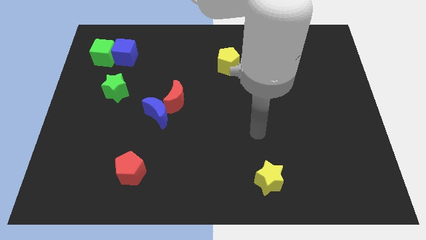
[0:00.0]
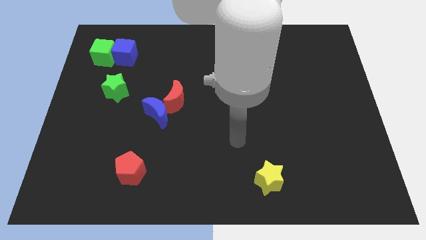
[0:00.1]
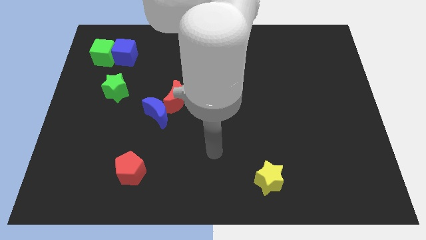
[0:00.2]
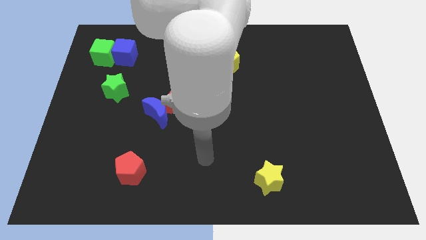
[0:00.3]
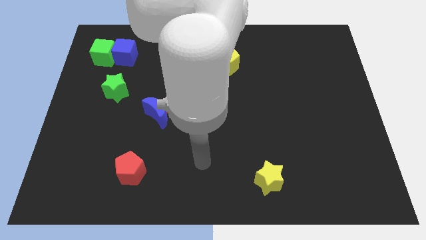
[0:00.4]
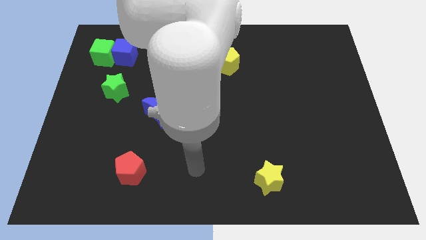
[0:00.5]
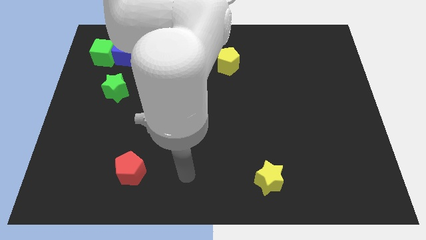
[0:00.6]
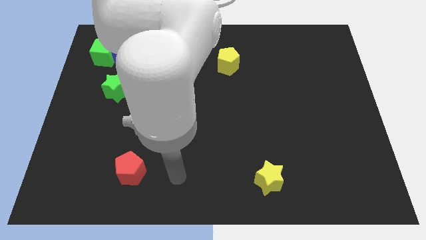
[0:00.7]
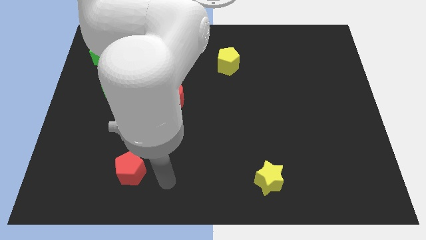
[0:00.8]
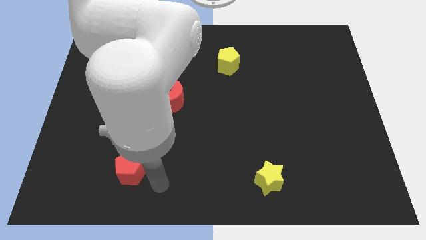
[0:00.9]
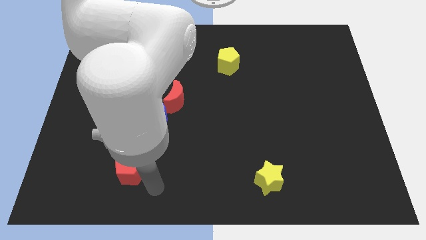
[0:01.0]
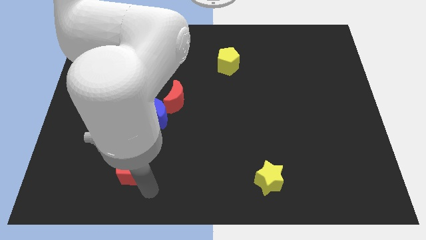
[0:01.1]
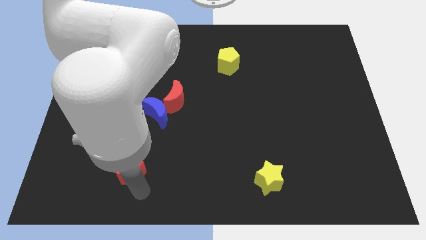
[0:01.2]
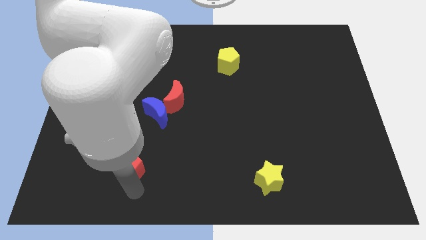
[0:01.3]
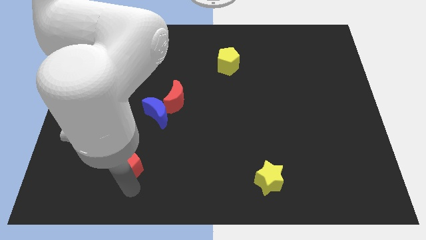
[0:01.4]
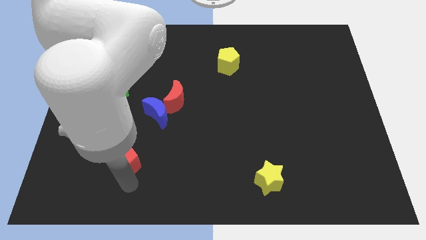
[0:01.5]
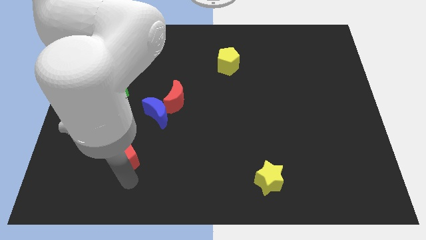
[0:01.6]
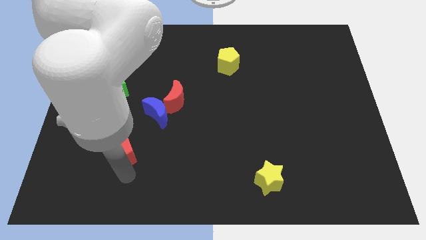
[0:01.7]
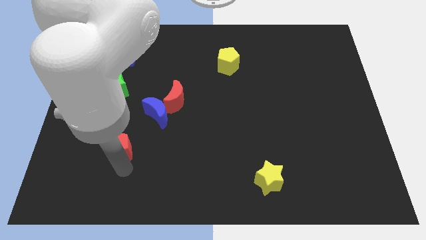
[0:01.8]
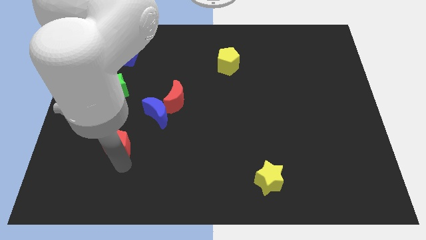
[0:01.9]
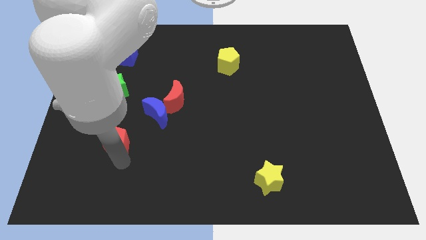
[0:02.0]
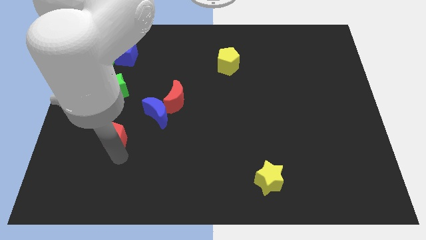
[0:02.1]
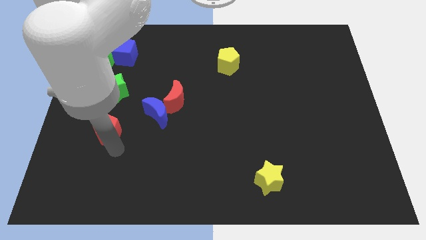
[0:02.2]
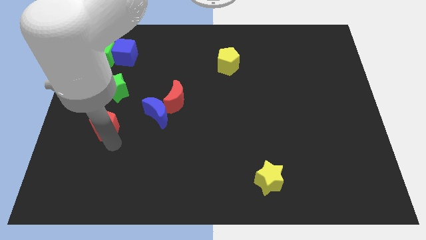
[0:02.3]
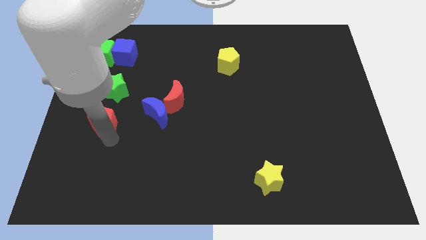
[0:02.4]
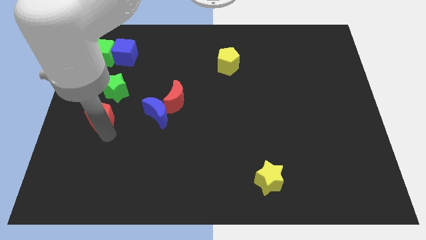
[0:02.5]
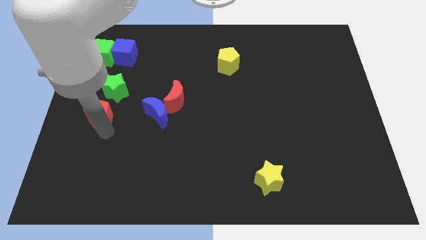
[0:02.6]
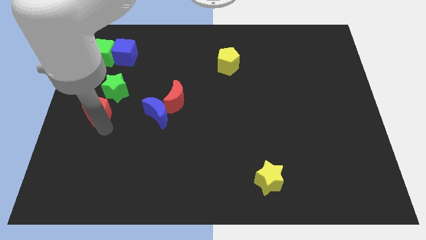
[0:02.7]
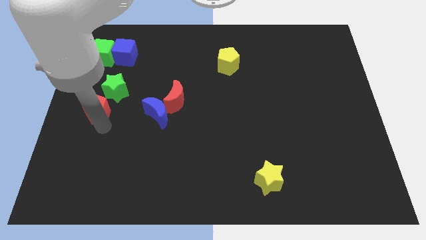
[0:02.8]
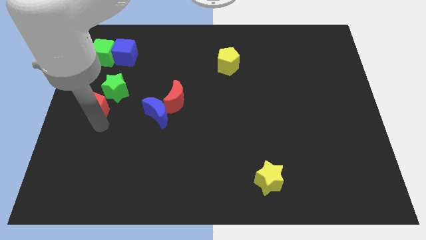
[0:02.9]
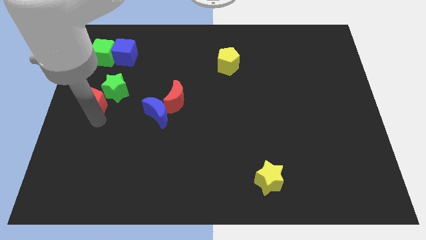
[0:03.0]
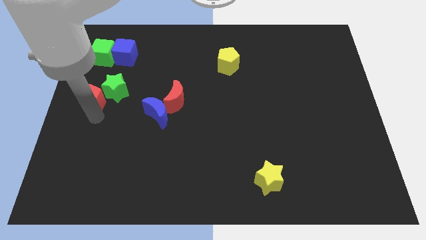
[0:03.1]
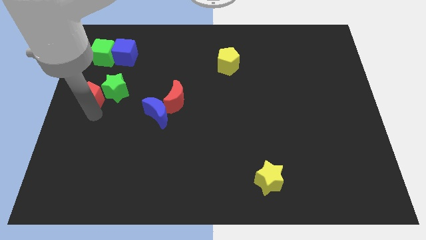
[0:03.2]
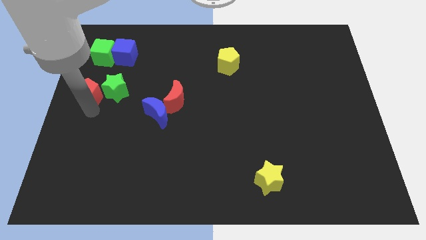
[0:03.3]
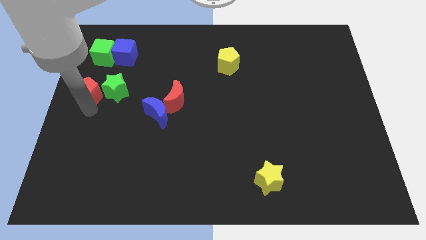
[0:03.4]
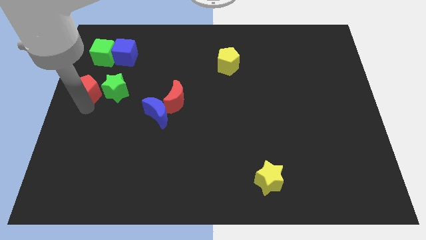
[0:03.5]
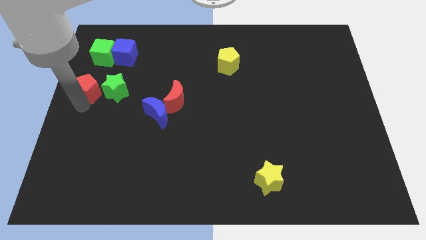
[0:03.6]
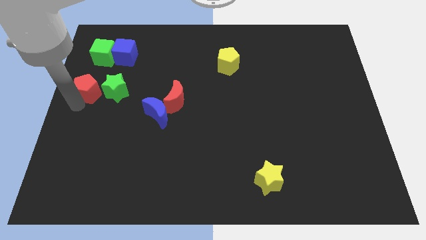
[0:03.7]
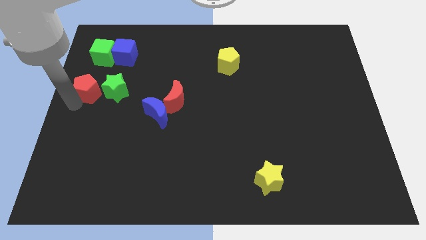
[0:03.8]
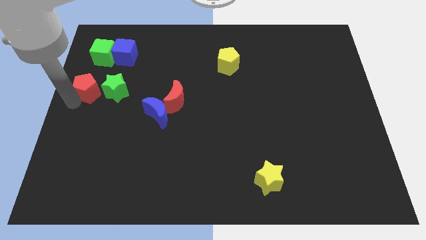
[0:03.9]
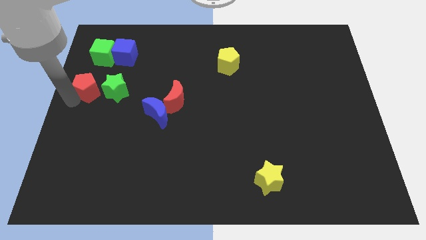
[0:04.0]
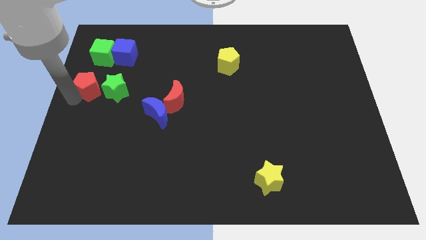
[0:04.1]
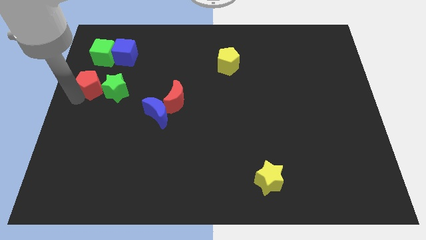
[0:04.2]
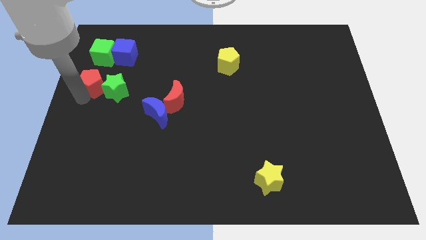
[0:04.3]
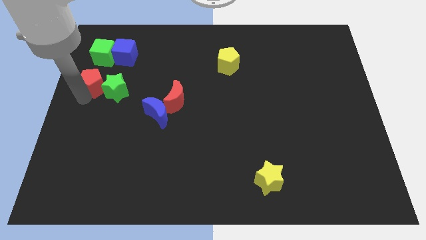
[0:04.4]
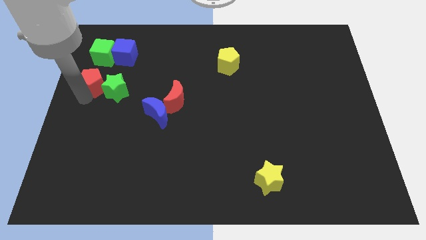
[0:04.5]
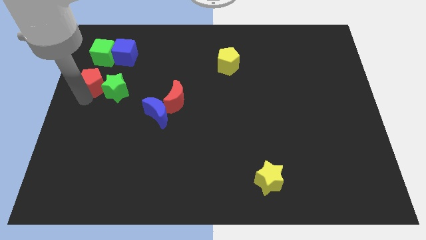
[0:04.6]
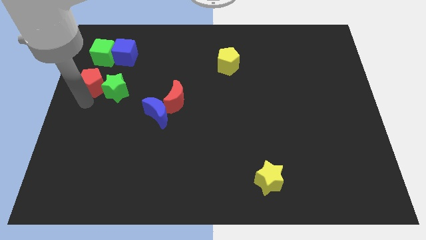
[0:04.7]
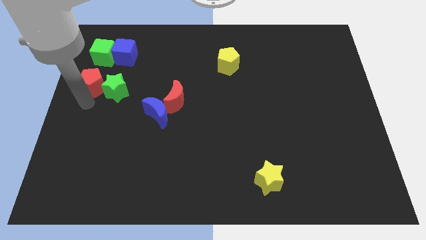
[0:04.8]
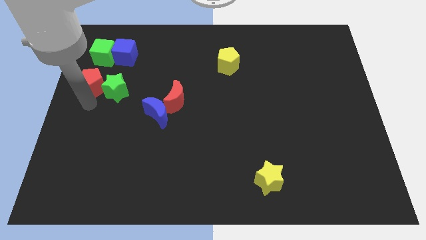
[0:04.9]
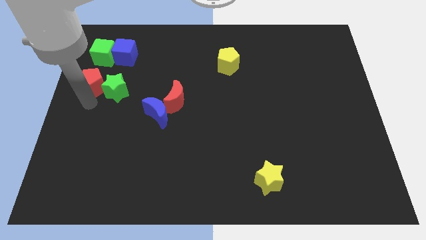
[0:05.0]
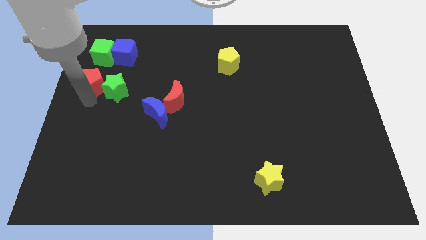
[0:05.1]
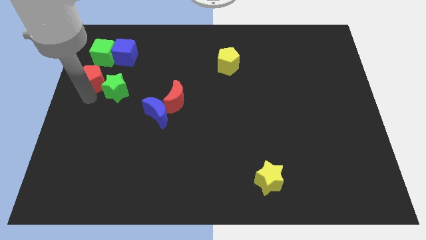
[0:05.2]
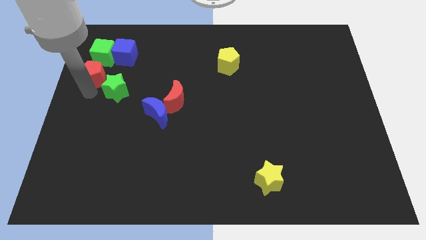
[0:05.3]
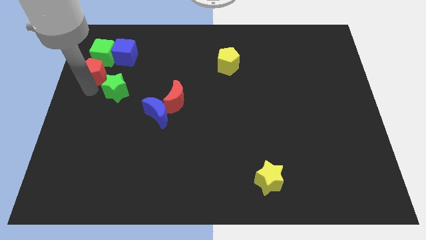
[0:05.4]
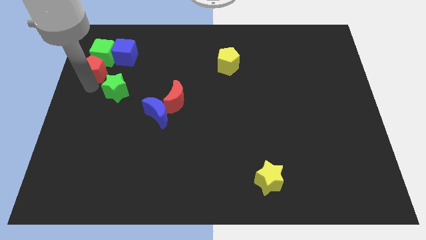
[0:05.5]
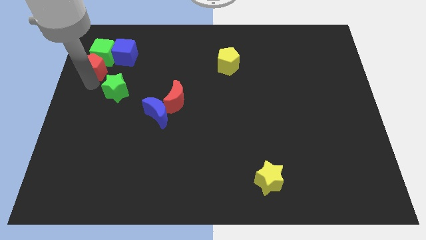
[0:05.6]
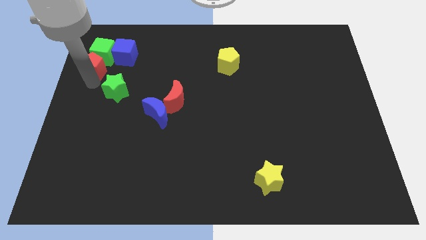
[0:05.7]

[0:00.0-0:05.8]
push the red pentagon next to the green cube

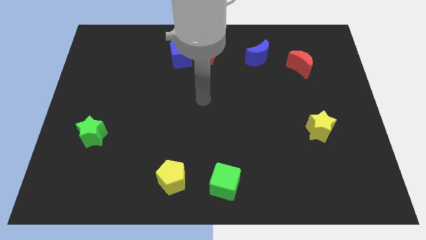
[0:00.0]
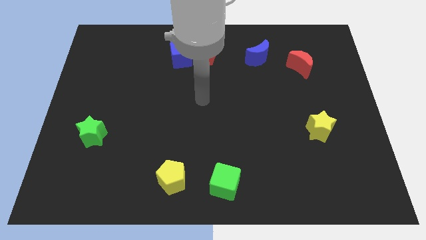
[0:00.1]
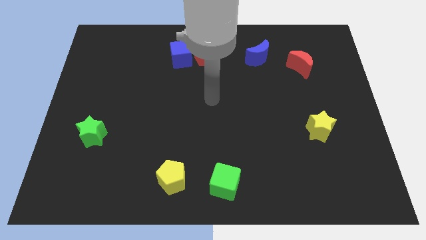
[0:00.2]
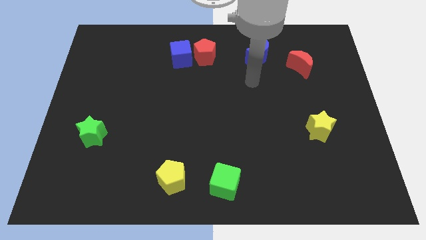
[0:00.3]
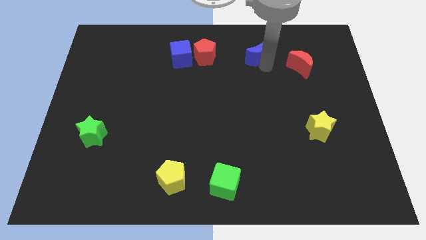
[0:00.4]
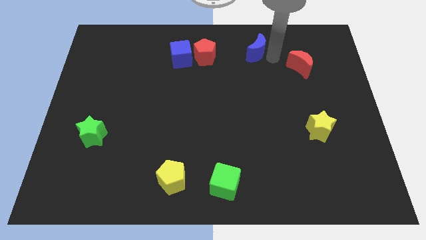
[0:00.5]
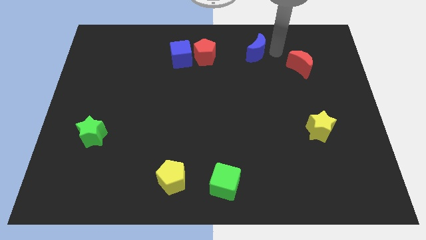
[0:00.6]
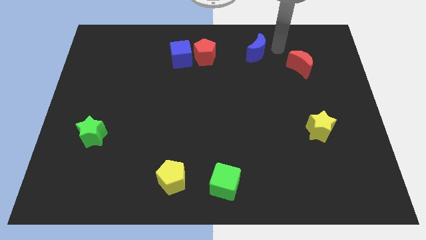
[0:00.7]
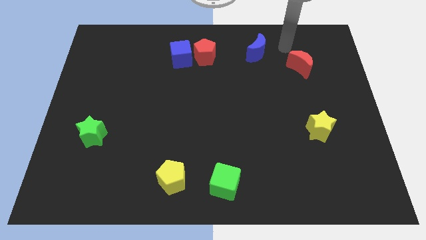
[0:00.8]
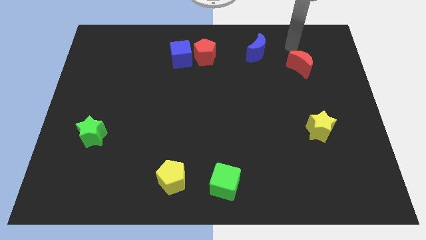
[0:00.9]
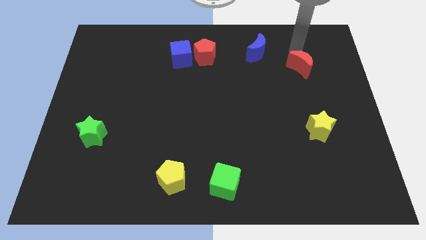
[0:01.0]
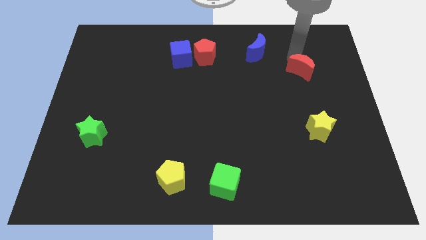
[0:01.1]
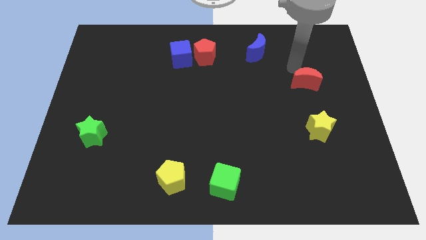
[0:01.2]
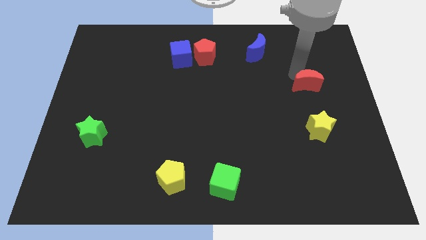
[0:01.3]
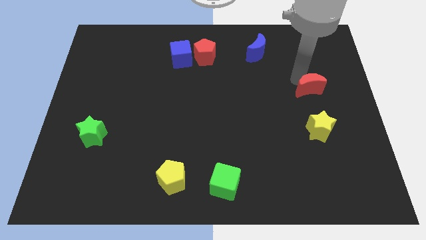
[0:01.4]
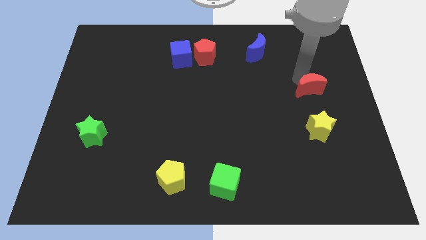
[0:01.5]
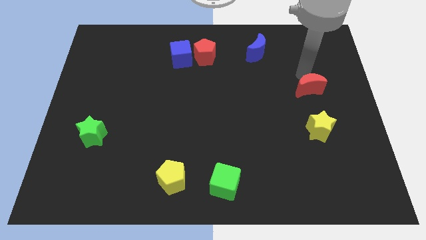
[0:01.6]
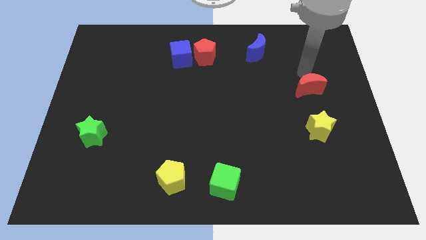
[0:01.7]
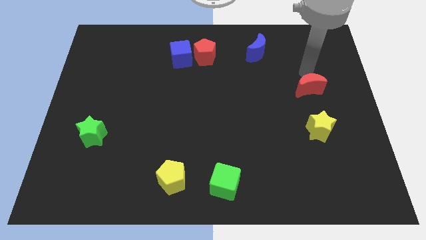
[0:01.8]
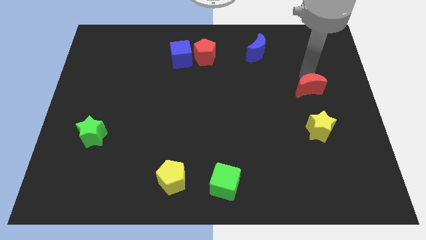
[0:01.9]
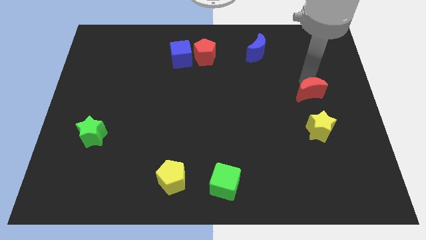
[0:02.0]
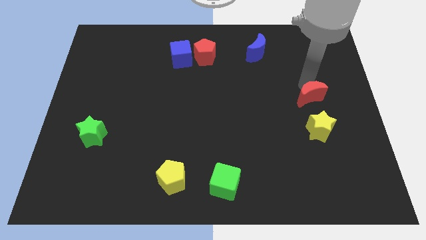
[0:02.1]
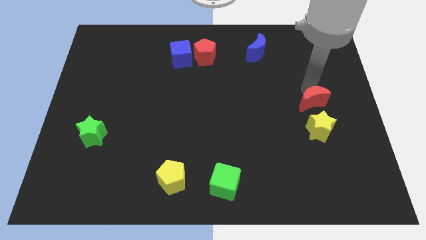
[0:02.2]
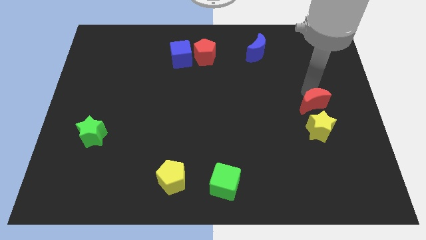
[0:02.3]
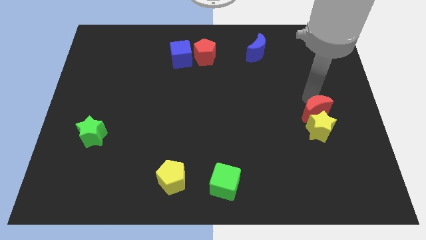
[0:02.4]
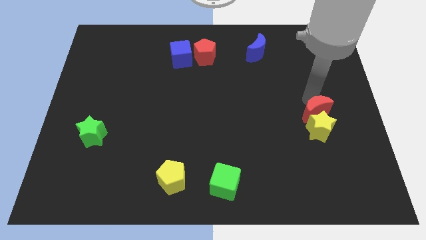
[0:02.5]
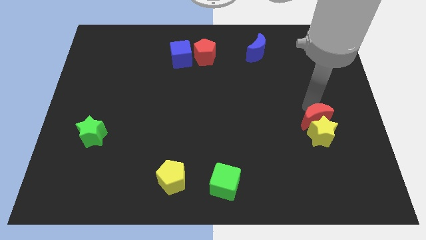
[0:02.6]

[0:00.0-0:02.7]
push the red moon to the yellow star

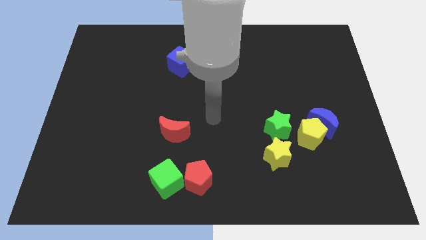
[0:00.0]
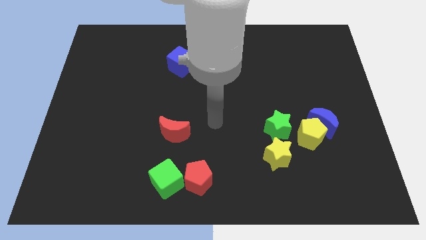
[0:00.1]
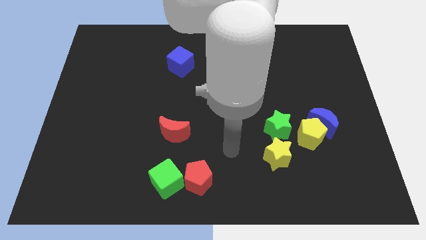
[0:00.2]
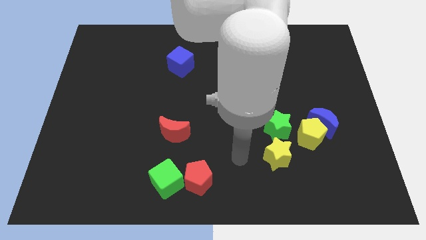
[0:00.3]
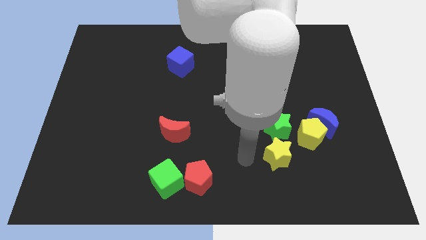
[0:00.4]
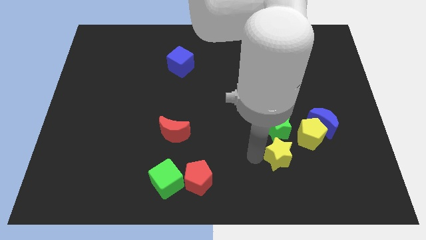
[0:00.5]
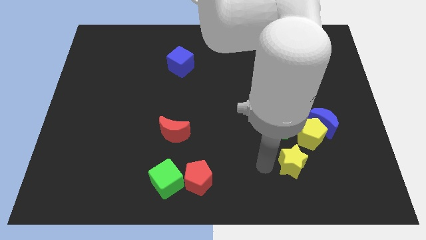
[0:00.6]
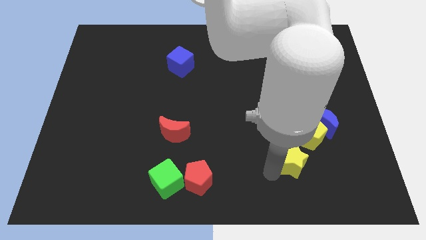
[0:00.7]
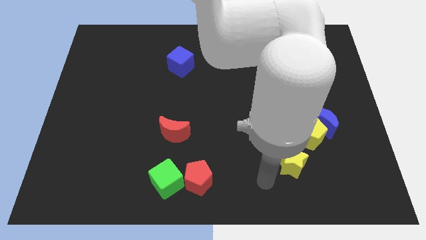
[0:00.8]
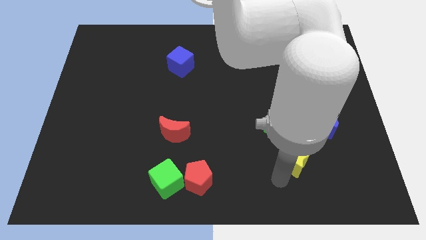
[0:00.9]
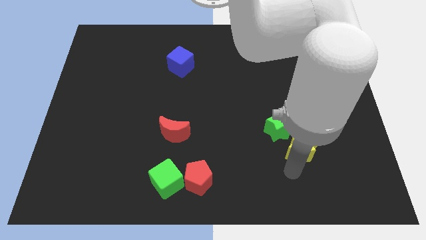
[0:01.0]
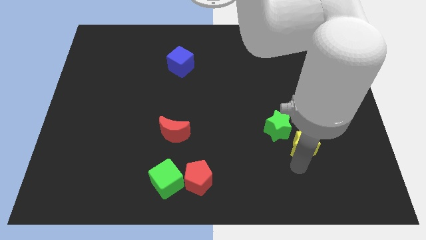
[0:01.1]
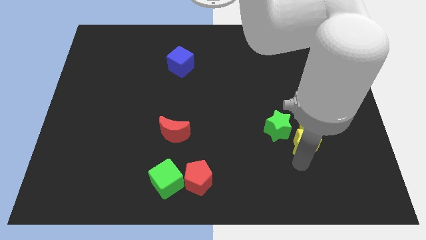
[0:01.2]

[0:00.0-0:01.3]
slide the yellow star to the yellow pentagon
